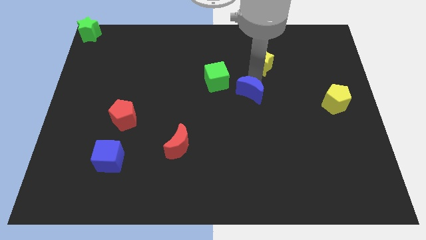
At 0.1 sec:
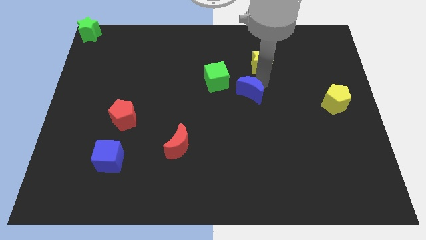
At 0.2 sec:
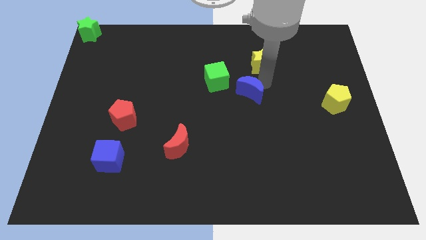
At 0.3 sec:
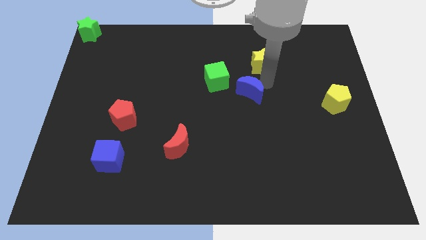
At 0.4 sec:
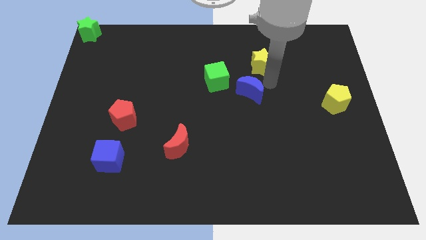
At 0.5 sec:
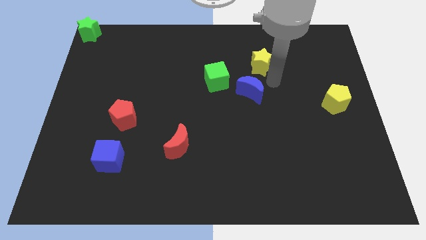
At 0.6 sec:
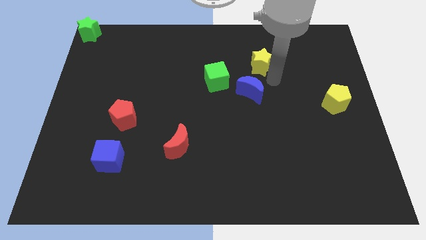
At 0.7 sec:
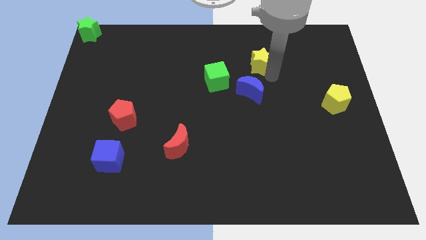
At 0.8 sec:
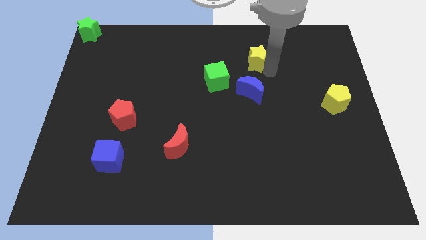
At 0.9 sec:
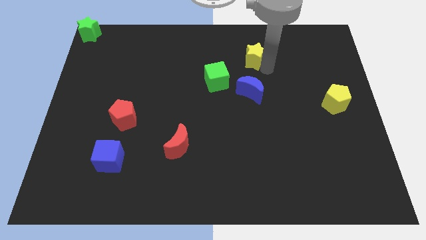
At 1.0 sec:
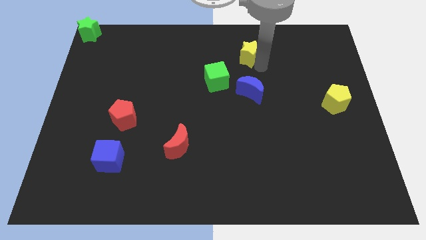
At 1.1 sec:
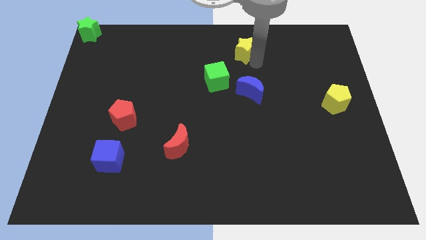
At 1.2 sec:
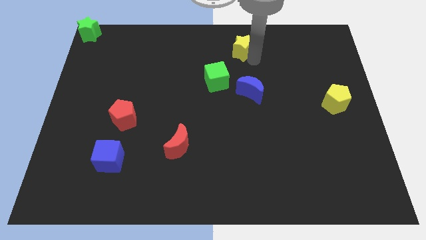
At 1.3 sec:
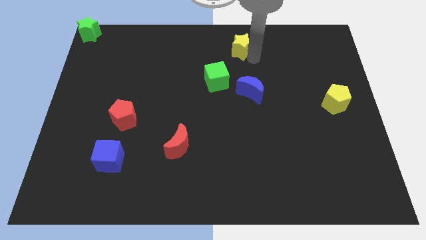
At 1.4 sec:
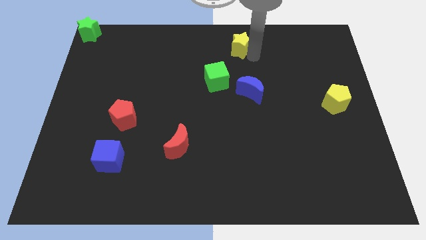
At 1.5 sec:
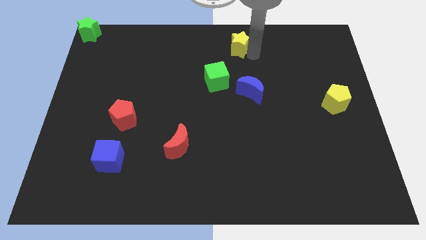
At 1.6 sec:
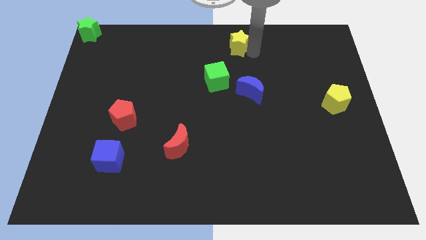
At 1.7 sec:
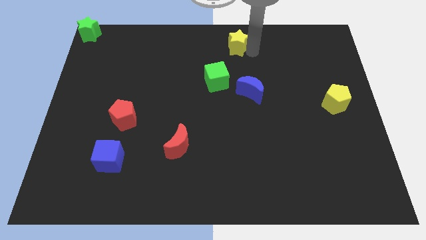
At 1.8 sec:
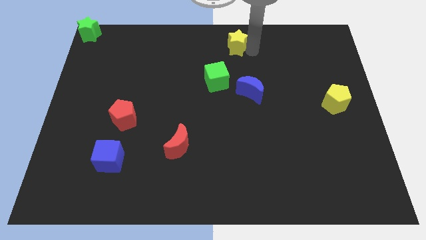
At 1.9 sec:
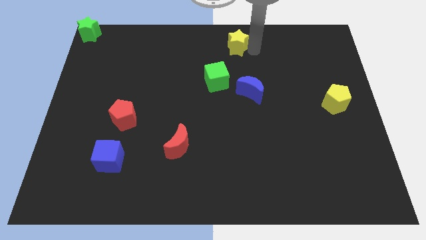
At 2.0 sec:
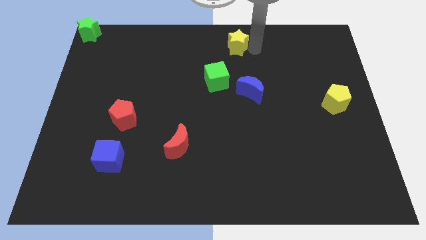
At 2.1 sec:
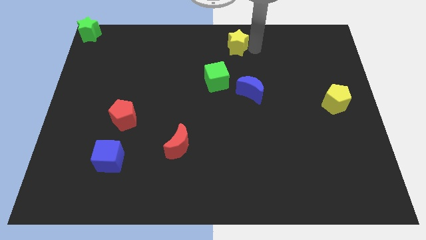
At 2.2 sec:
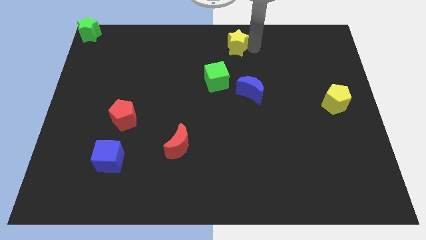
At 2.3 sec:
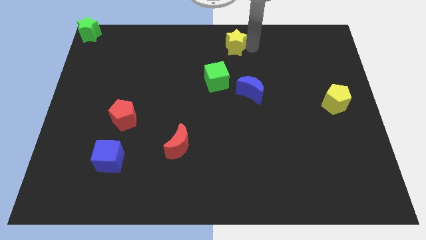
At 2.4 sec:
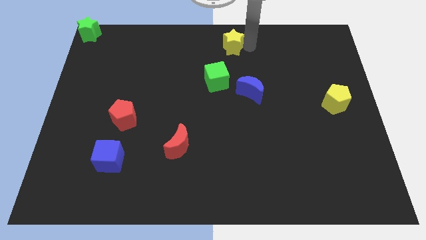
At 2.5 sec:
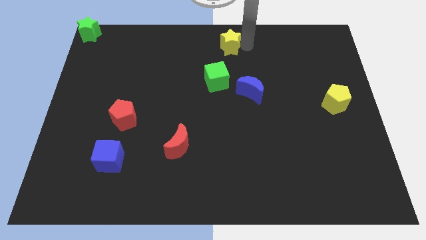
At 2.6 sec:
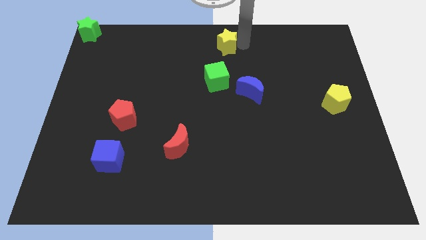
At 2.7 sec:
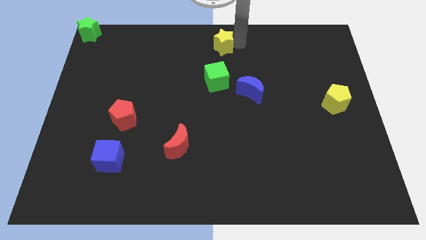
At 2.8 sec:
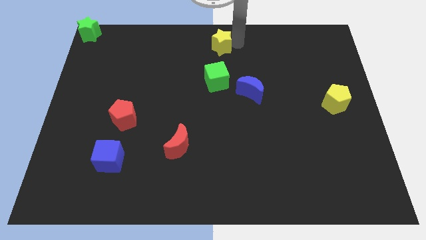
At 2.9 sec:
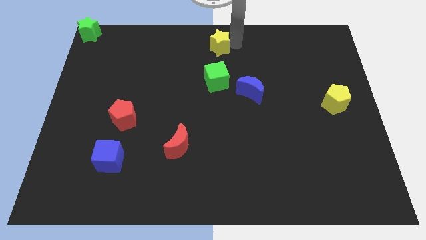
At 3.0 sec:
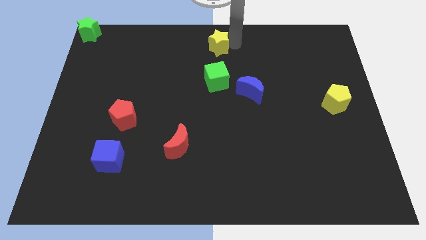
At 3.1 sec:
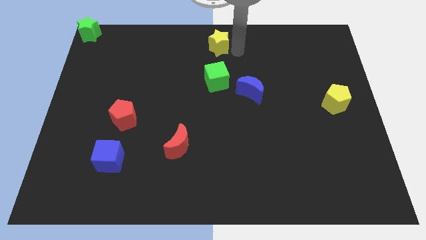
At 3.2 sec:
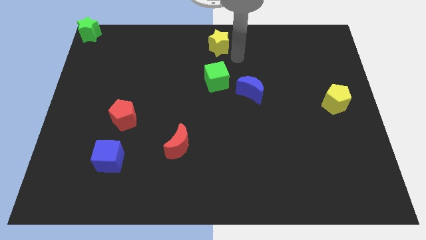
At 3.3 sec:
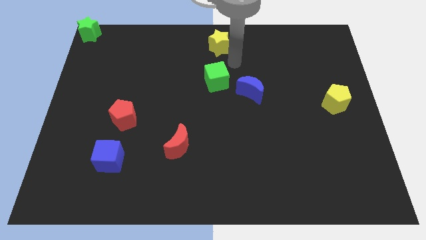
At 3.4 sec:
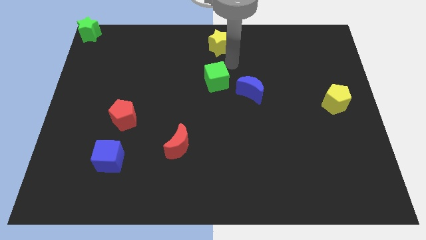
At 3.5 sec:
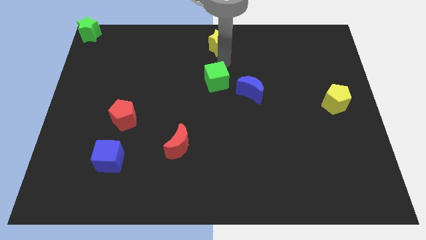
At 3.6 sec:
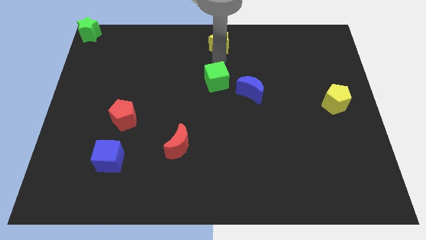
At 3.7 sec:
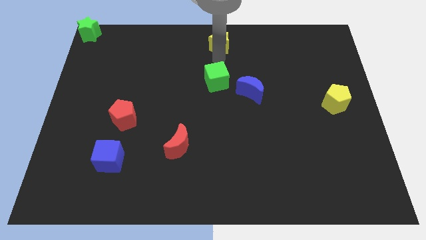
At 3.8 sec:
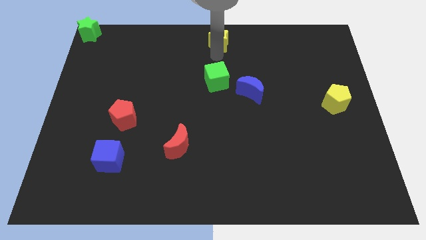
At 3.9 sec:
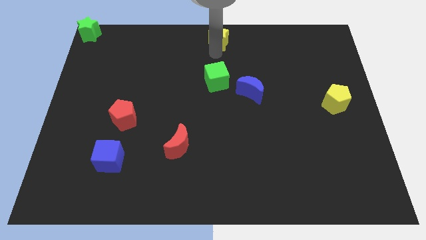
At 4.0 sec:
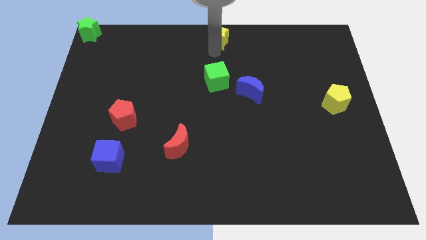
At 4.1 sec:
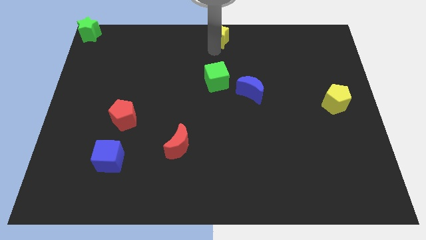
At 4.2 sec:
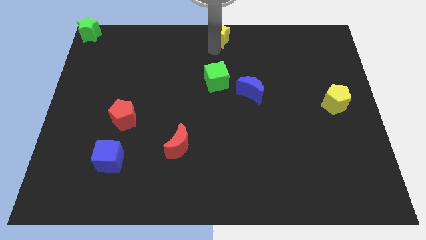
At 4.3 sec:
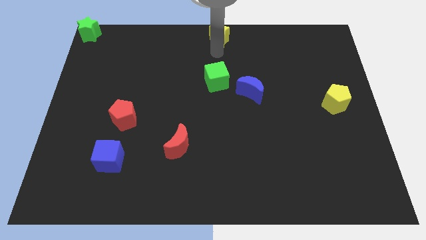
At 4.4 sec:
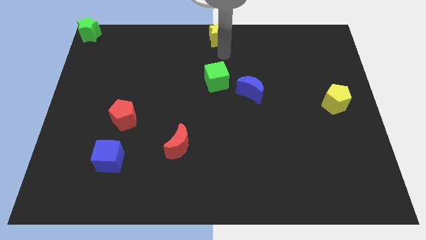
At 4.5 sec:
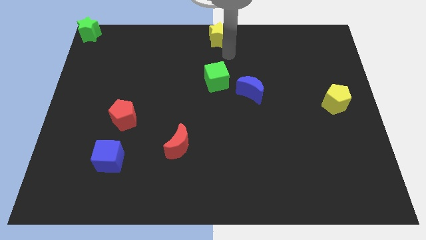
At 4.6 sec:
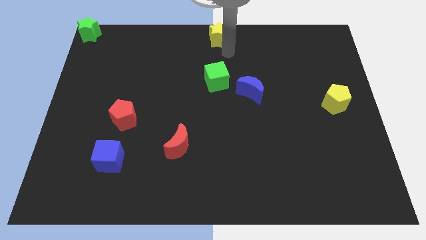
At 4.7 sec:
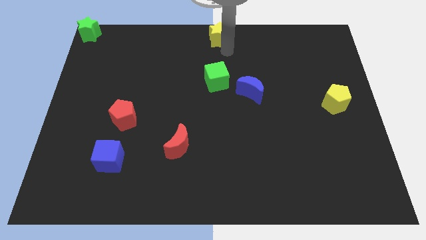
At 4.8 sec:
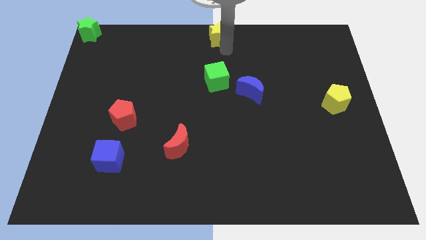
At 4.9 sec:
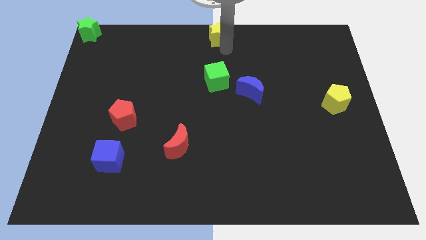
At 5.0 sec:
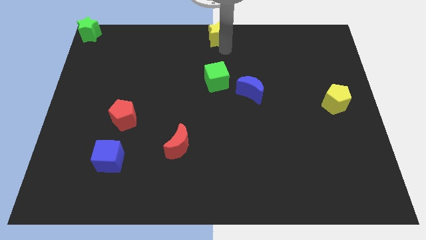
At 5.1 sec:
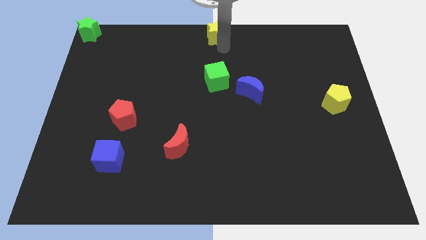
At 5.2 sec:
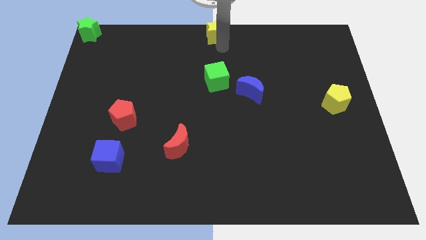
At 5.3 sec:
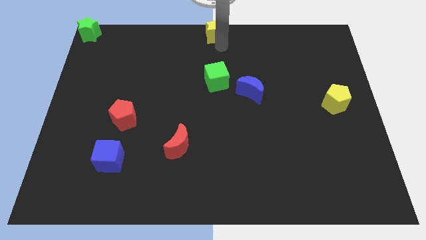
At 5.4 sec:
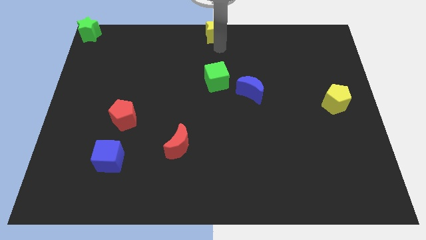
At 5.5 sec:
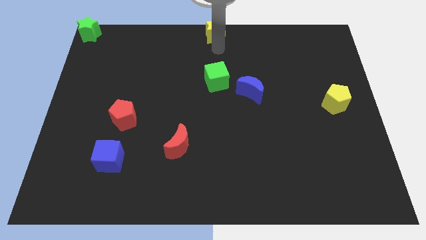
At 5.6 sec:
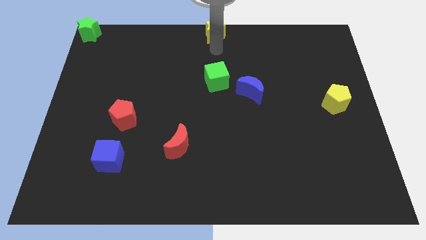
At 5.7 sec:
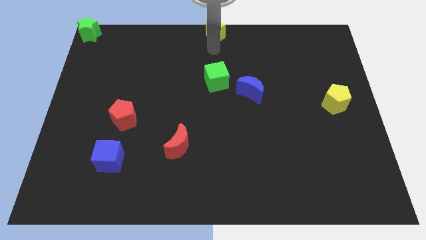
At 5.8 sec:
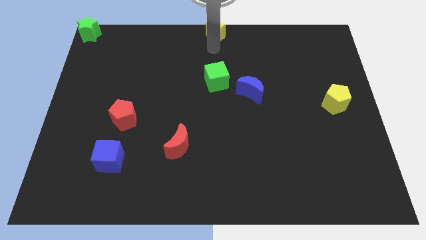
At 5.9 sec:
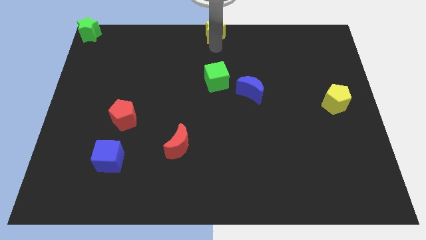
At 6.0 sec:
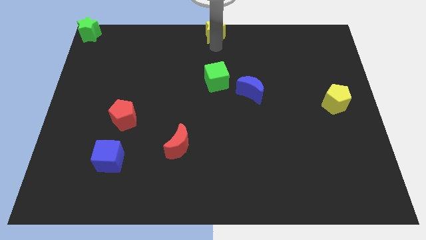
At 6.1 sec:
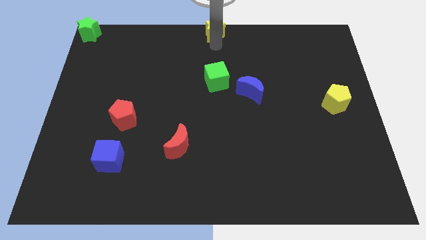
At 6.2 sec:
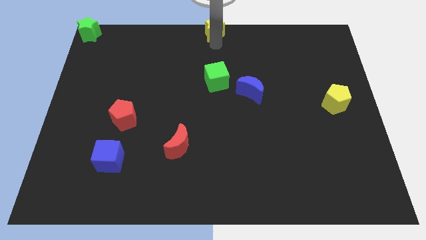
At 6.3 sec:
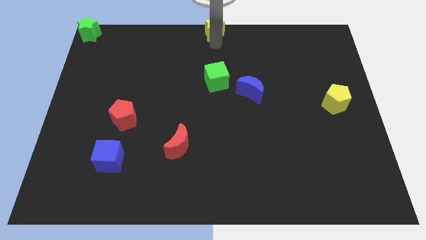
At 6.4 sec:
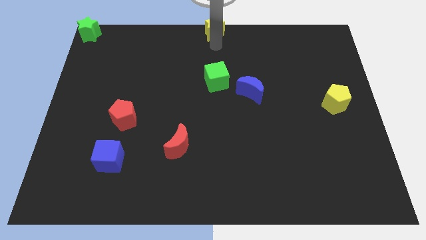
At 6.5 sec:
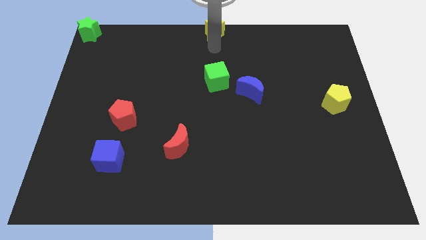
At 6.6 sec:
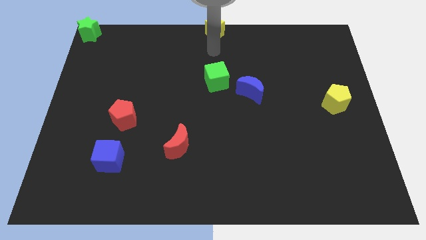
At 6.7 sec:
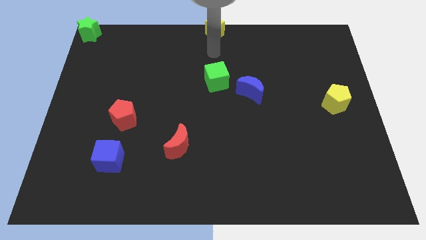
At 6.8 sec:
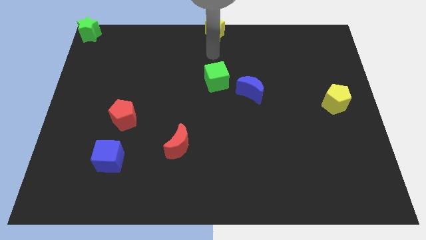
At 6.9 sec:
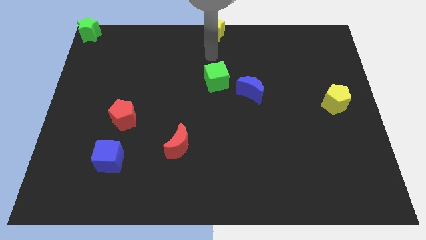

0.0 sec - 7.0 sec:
move the yellow star to the top center

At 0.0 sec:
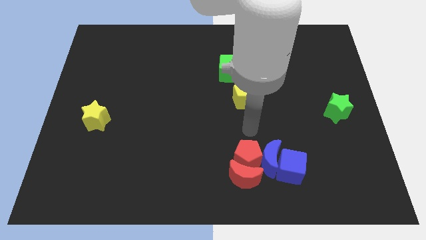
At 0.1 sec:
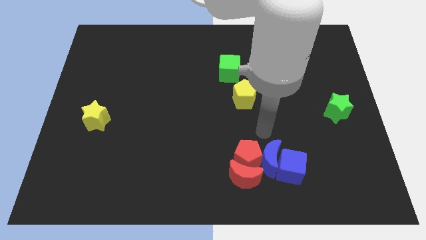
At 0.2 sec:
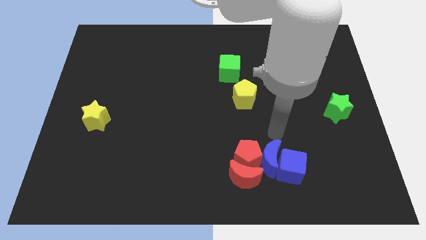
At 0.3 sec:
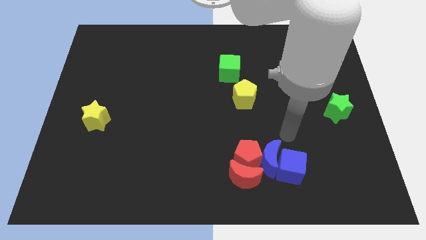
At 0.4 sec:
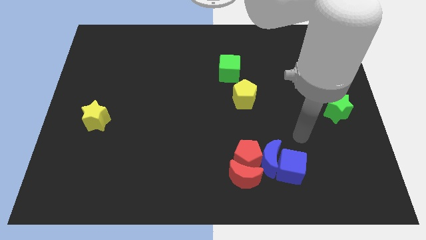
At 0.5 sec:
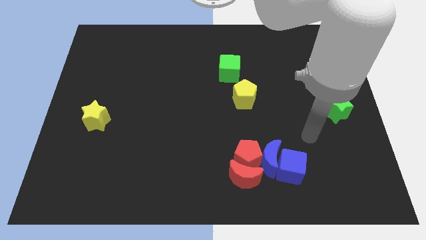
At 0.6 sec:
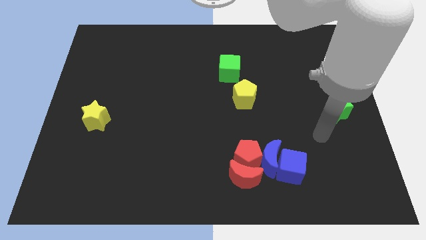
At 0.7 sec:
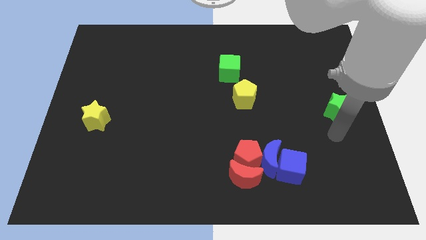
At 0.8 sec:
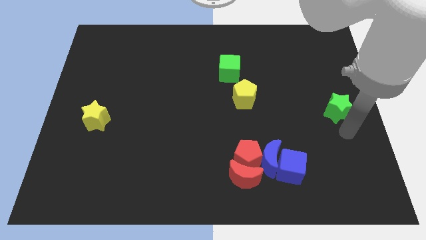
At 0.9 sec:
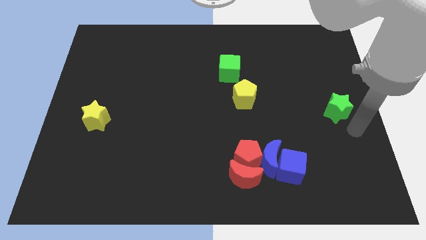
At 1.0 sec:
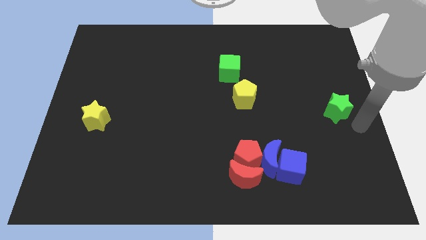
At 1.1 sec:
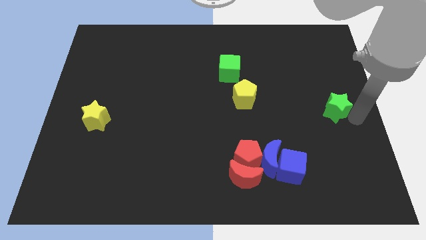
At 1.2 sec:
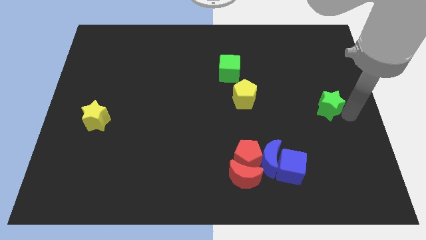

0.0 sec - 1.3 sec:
point your arm at the right of the green star

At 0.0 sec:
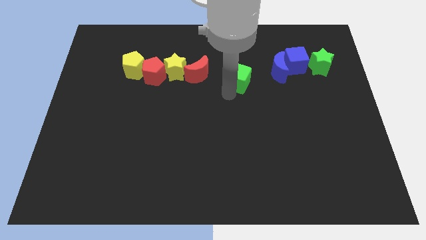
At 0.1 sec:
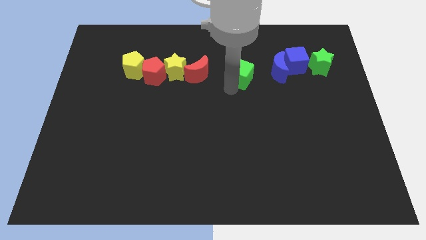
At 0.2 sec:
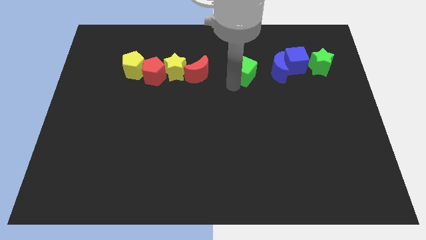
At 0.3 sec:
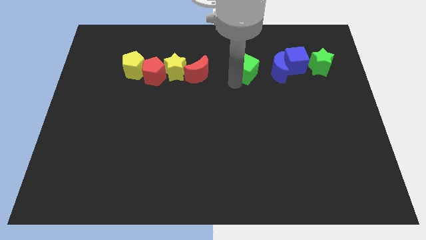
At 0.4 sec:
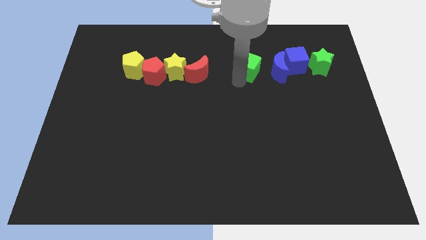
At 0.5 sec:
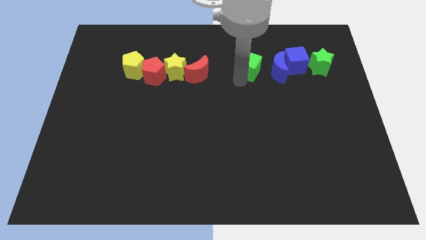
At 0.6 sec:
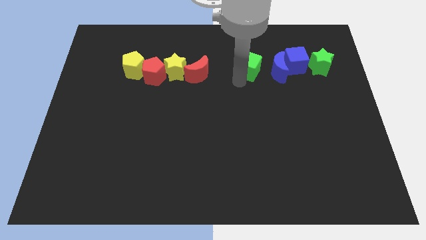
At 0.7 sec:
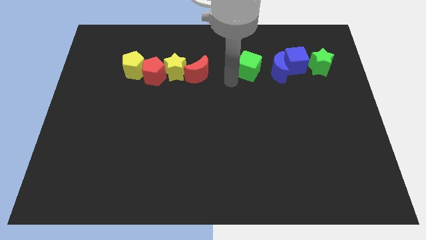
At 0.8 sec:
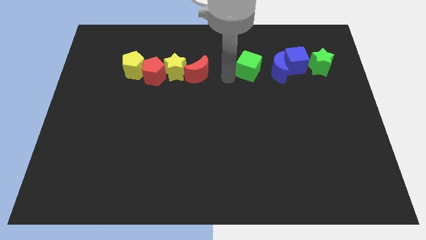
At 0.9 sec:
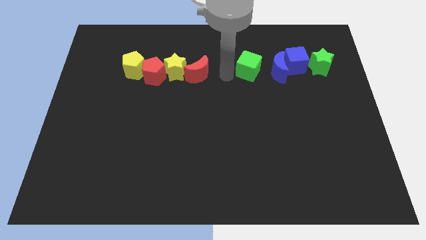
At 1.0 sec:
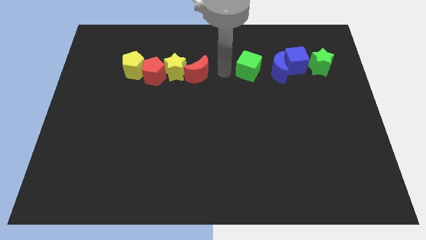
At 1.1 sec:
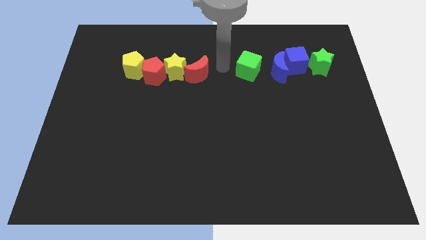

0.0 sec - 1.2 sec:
push green cube beside blue crescent
